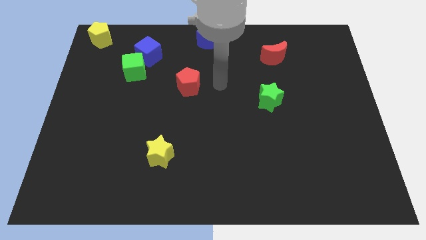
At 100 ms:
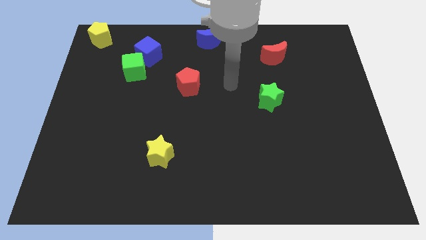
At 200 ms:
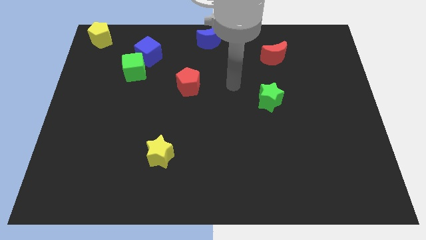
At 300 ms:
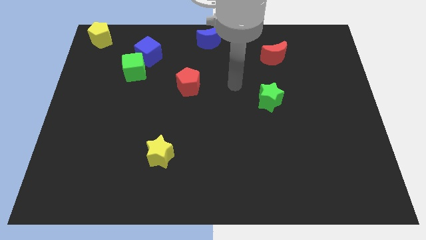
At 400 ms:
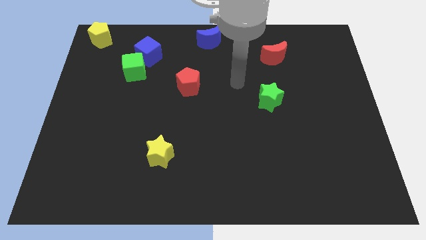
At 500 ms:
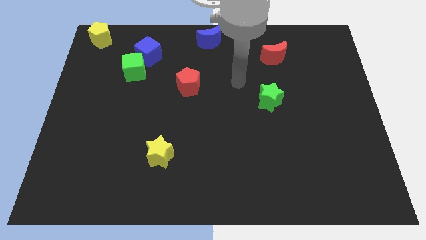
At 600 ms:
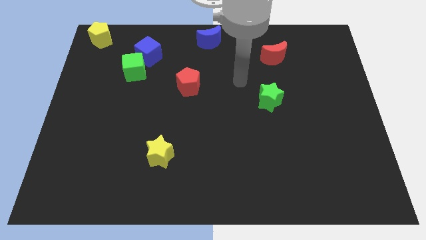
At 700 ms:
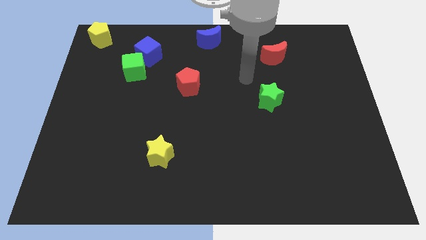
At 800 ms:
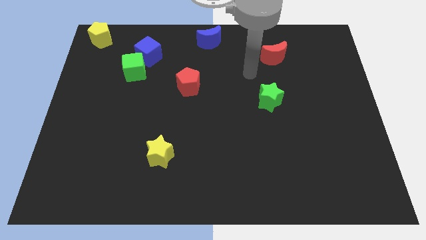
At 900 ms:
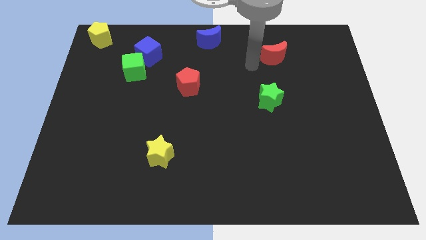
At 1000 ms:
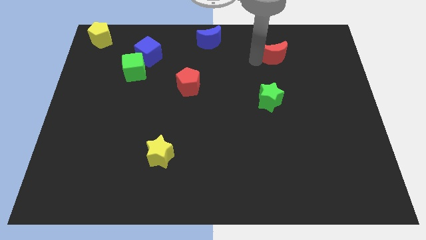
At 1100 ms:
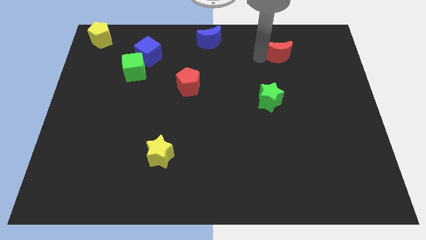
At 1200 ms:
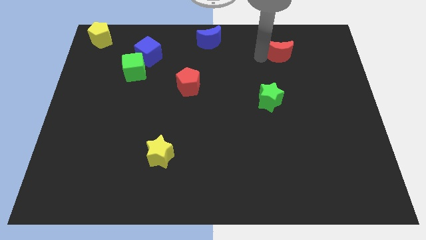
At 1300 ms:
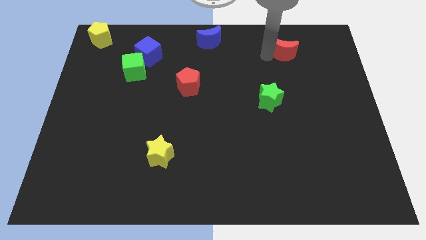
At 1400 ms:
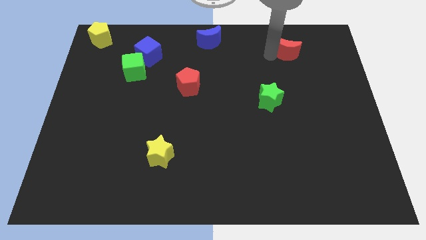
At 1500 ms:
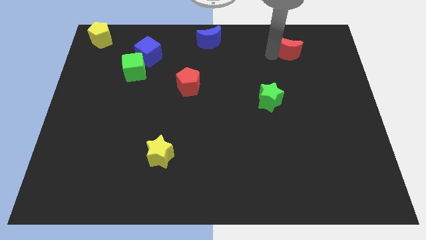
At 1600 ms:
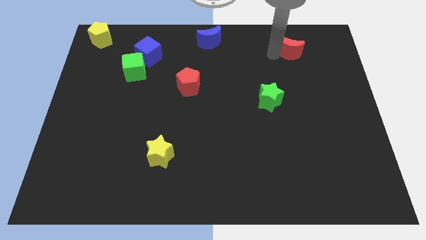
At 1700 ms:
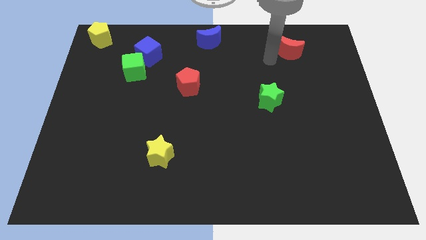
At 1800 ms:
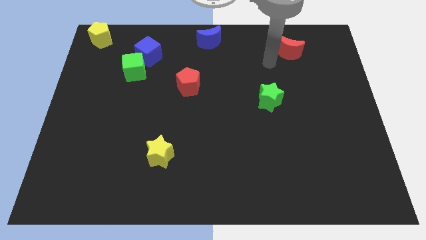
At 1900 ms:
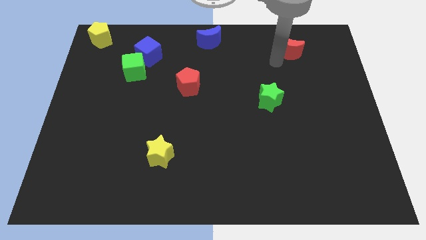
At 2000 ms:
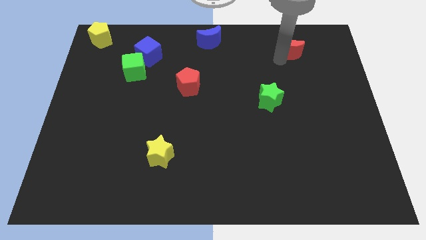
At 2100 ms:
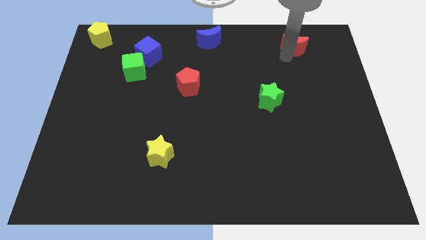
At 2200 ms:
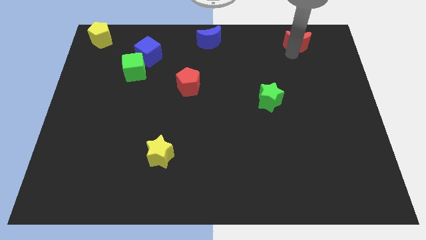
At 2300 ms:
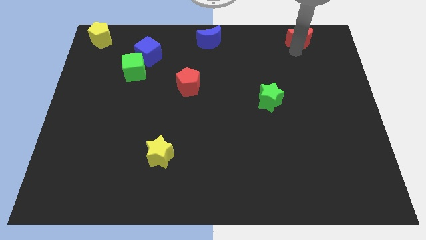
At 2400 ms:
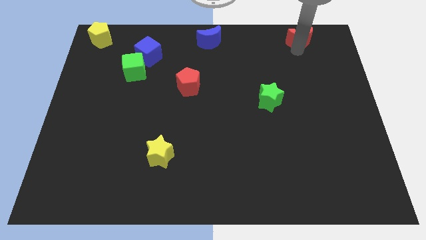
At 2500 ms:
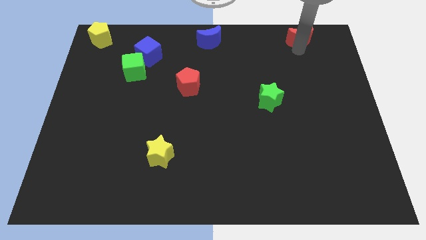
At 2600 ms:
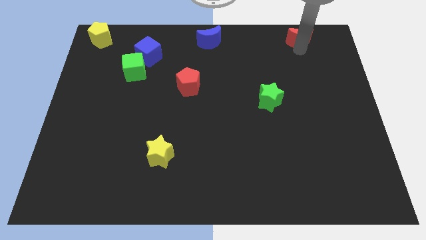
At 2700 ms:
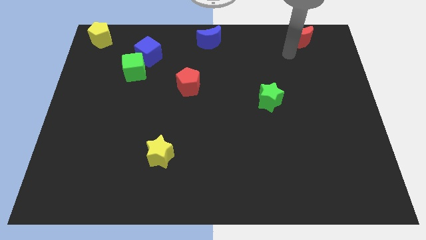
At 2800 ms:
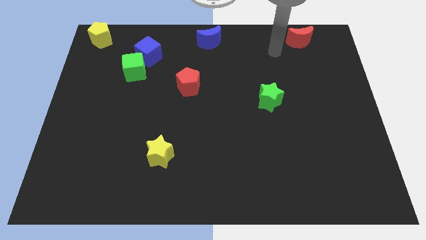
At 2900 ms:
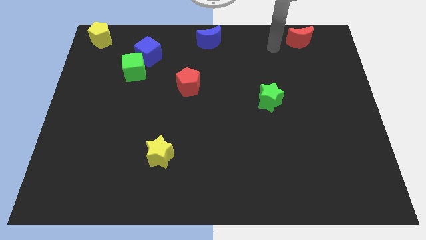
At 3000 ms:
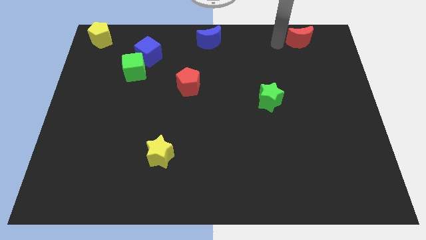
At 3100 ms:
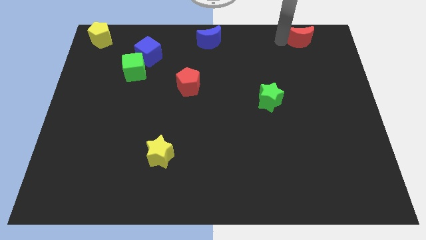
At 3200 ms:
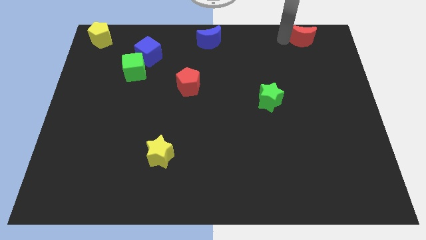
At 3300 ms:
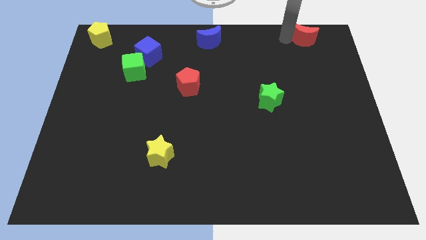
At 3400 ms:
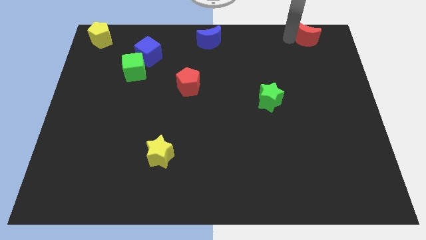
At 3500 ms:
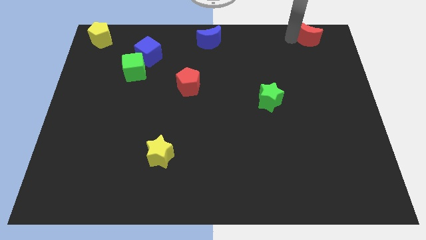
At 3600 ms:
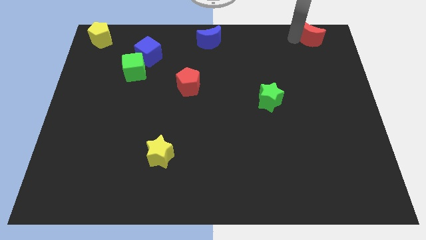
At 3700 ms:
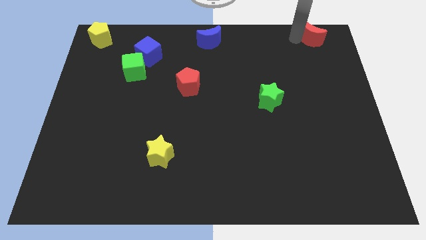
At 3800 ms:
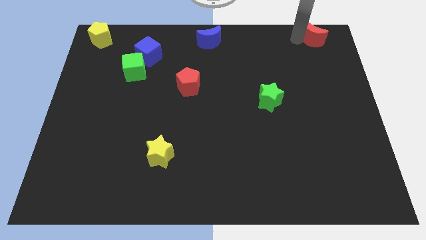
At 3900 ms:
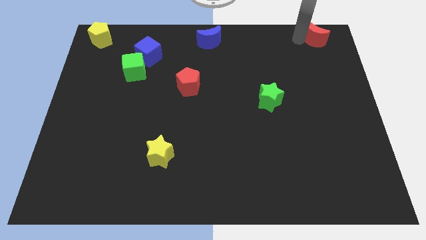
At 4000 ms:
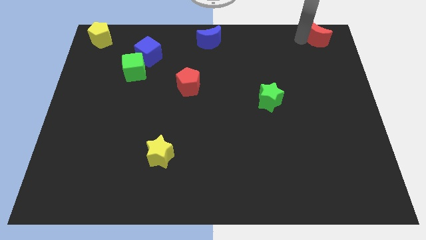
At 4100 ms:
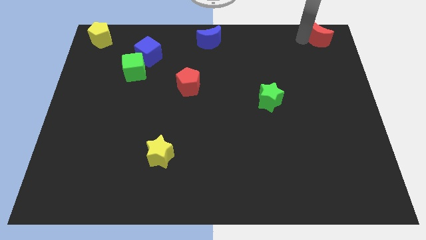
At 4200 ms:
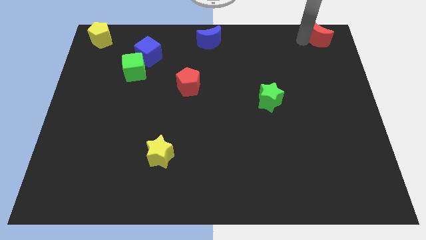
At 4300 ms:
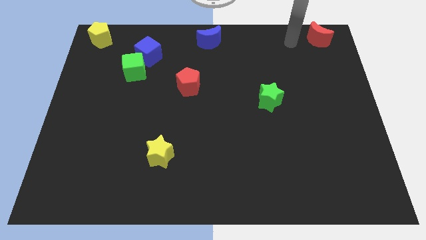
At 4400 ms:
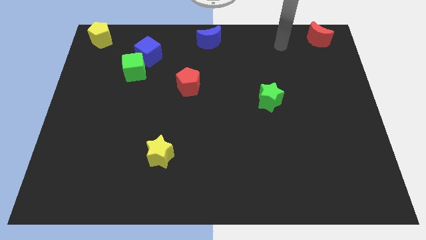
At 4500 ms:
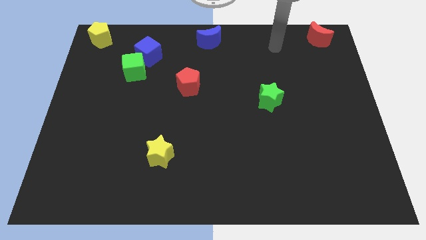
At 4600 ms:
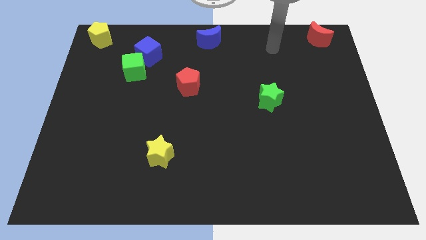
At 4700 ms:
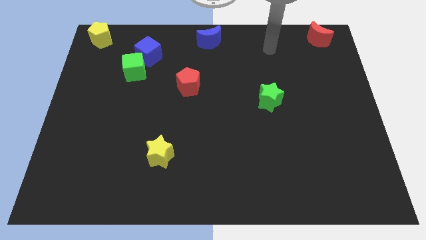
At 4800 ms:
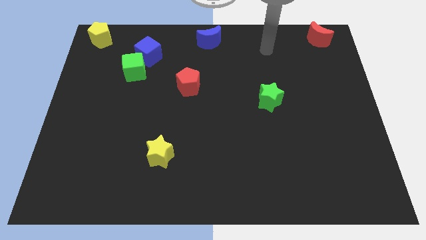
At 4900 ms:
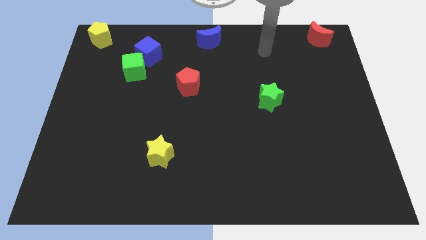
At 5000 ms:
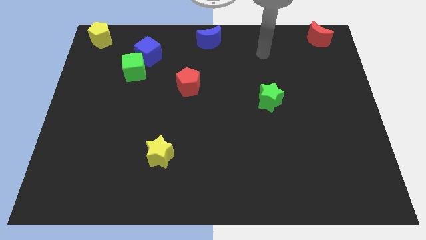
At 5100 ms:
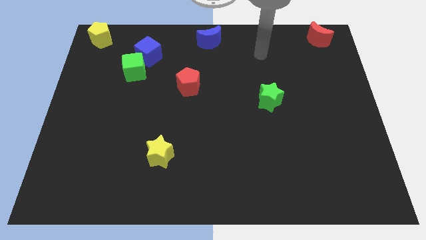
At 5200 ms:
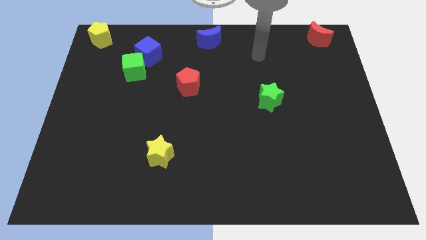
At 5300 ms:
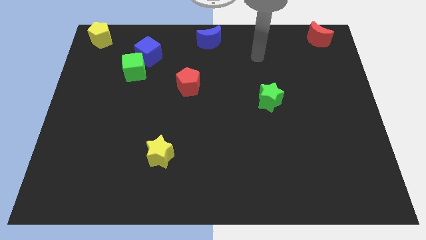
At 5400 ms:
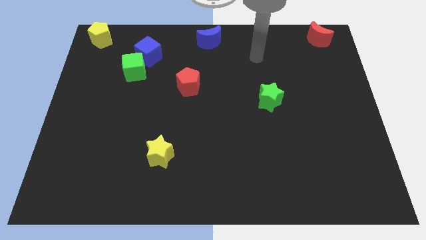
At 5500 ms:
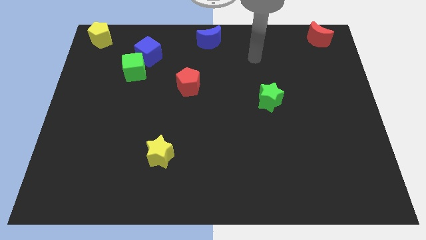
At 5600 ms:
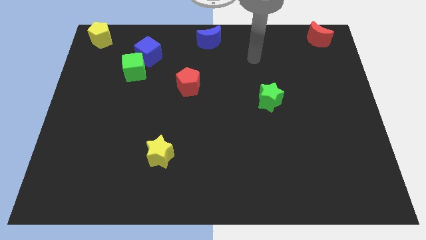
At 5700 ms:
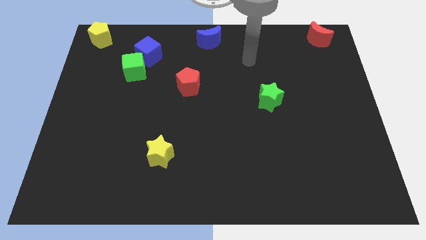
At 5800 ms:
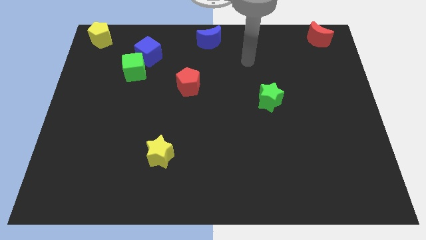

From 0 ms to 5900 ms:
push the red crescent to the top right corner

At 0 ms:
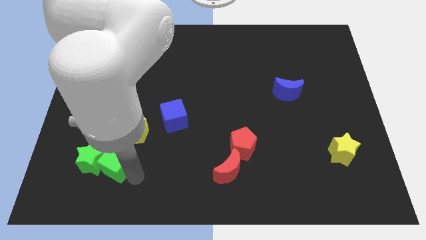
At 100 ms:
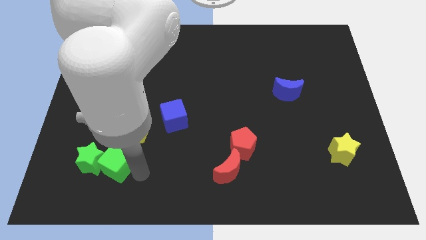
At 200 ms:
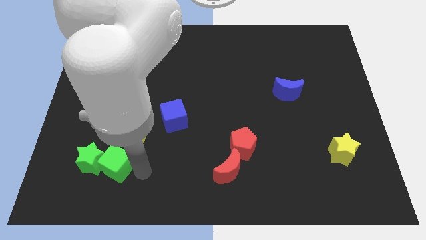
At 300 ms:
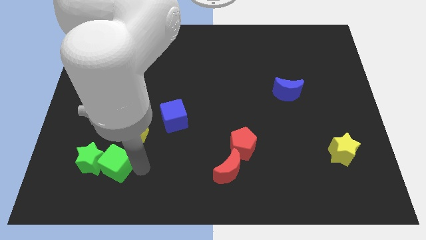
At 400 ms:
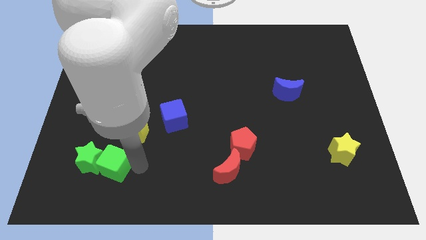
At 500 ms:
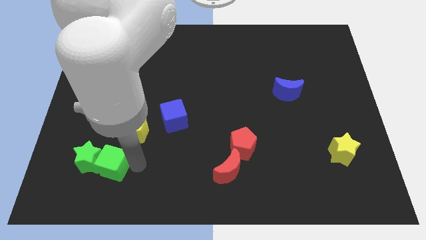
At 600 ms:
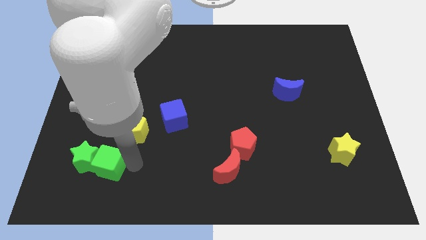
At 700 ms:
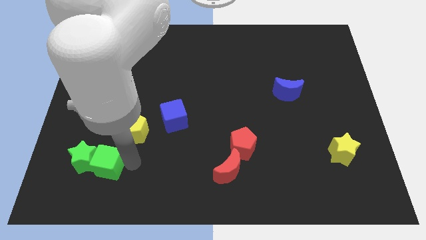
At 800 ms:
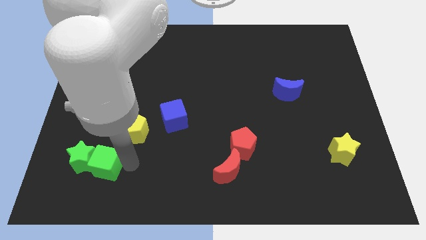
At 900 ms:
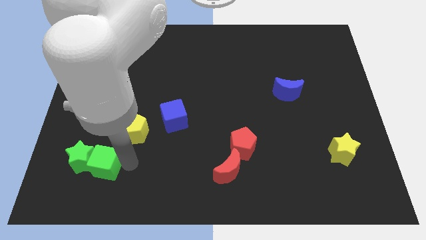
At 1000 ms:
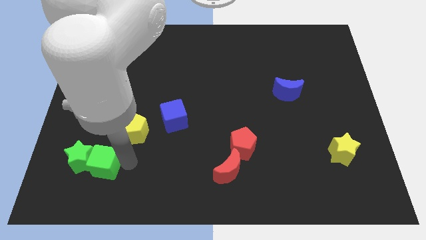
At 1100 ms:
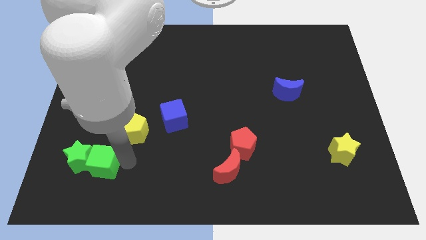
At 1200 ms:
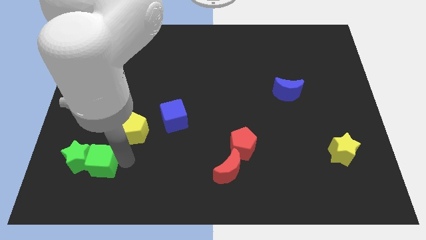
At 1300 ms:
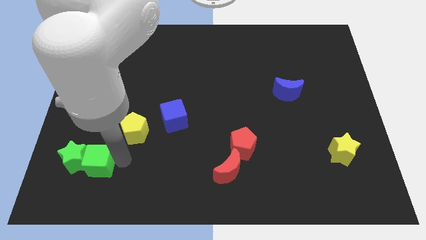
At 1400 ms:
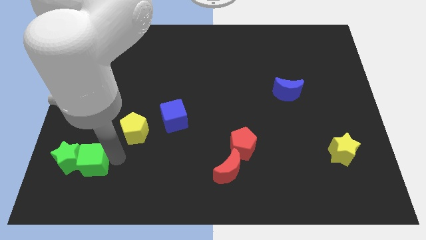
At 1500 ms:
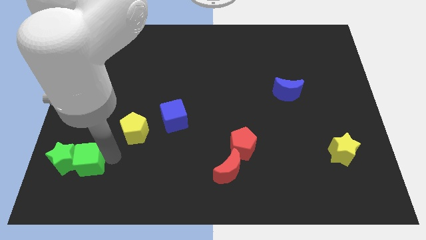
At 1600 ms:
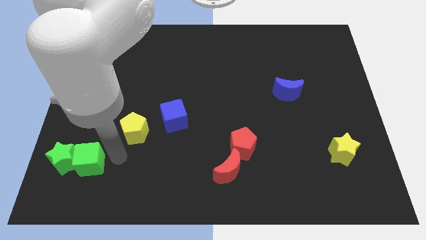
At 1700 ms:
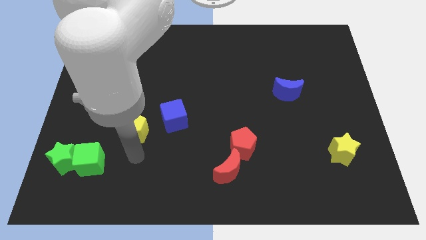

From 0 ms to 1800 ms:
move the green blocks slightly to the left

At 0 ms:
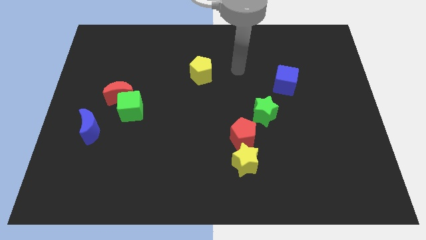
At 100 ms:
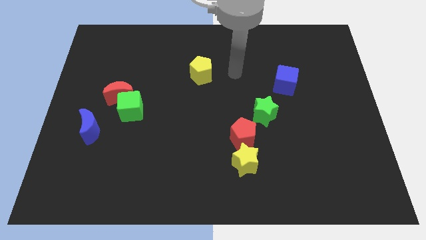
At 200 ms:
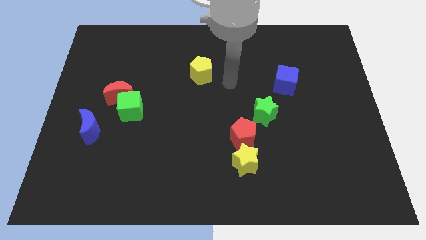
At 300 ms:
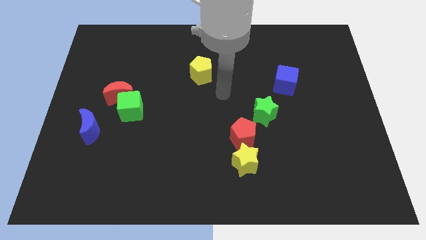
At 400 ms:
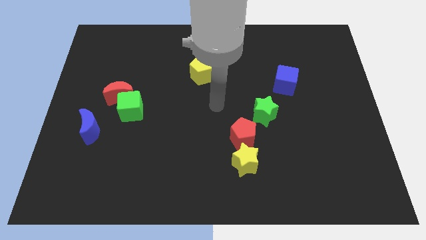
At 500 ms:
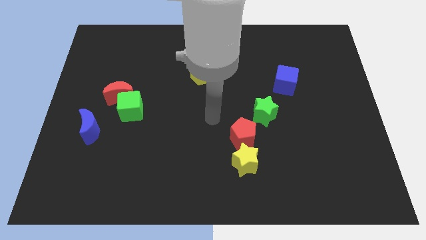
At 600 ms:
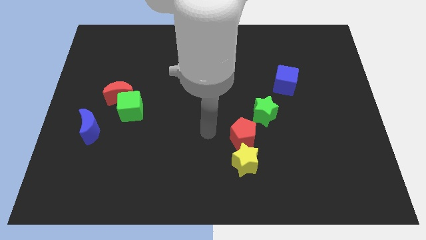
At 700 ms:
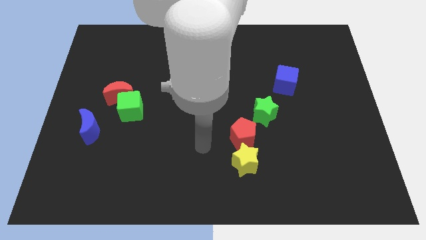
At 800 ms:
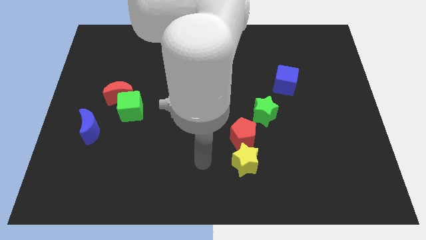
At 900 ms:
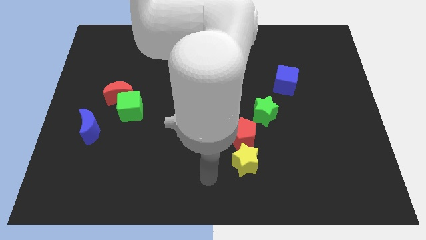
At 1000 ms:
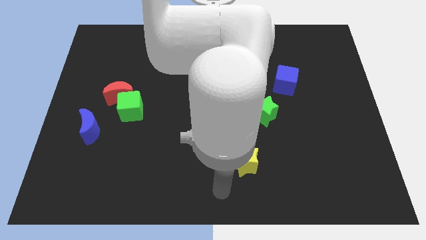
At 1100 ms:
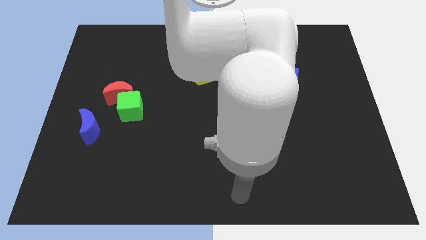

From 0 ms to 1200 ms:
place your hand diagonally bottom left to the yellow star
